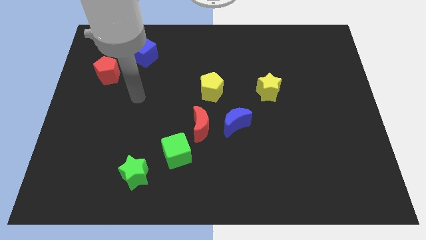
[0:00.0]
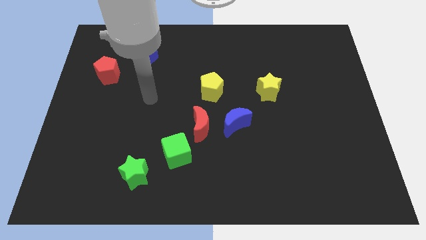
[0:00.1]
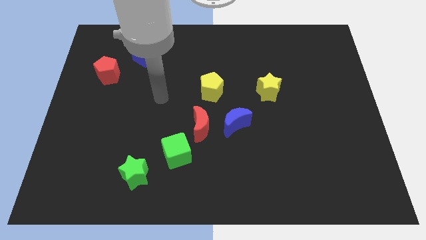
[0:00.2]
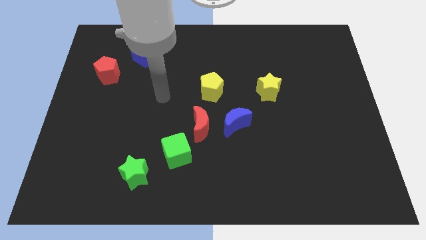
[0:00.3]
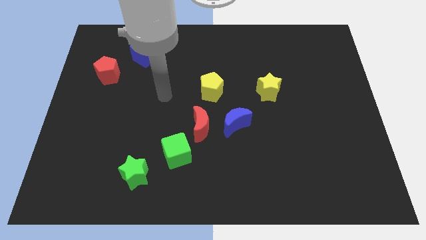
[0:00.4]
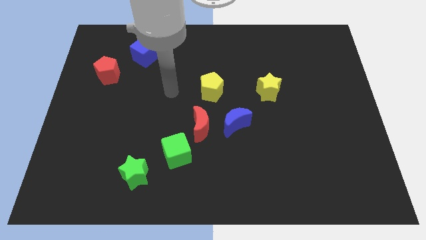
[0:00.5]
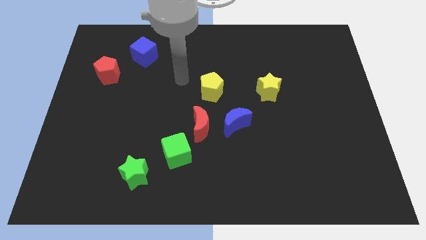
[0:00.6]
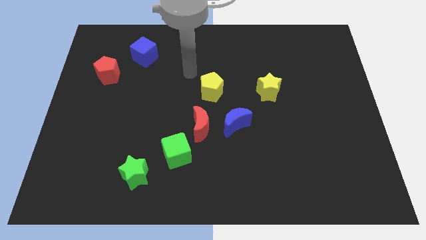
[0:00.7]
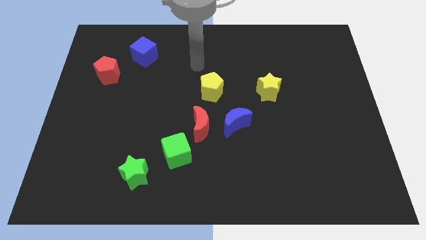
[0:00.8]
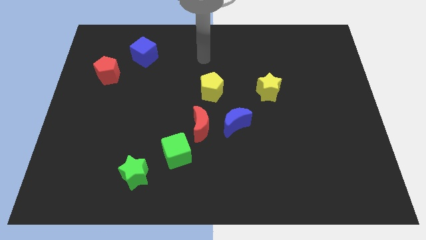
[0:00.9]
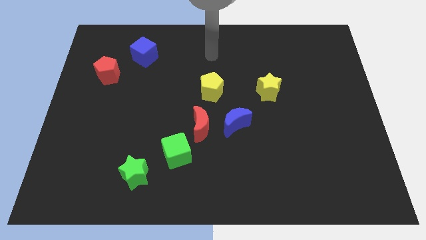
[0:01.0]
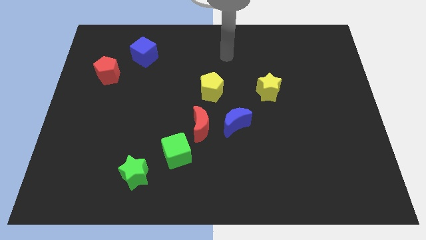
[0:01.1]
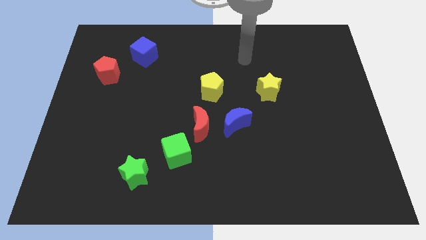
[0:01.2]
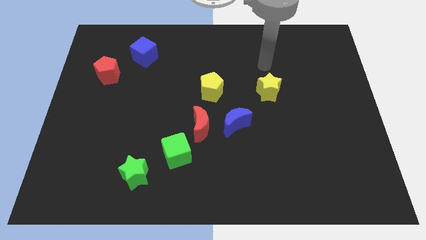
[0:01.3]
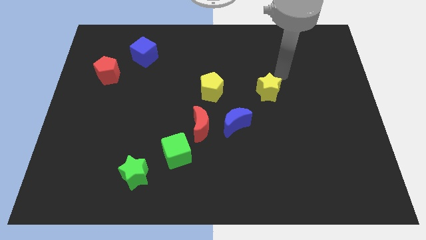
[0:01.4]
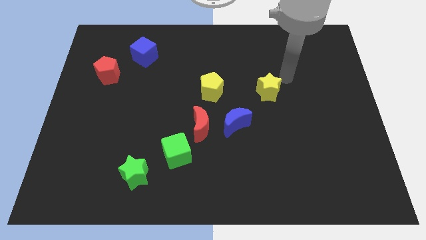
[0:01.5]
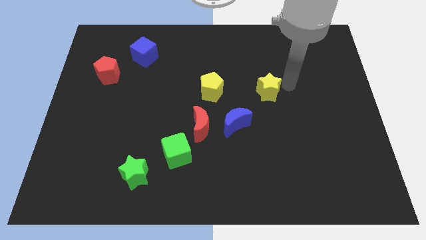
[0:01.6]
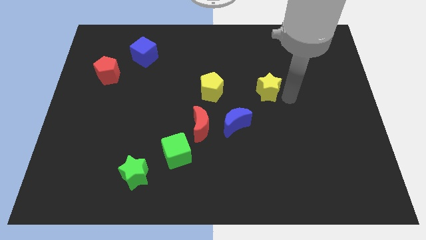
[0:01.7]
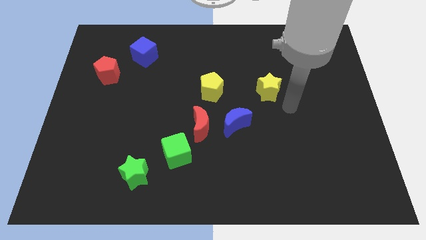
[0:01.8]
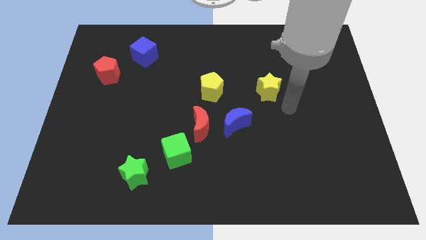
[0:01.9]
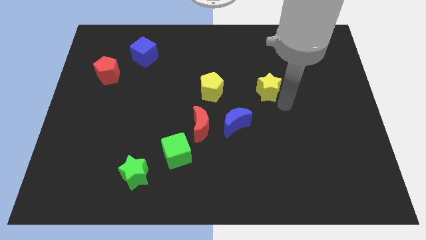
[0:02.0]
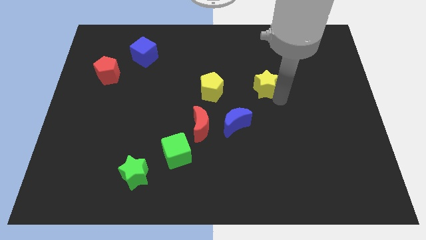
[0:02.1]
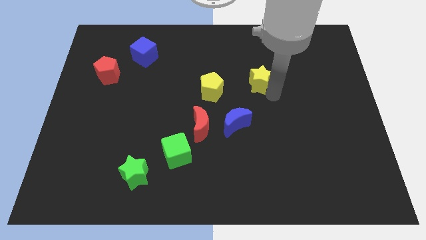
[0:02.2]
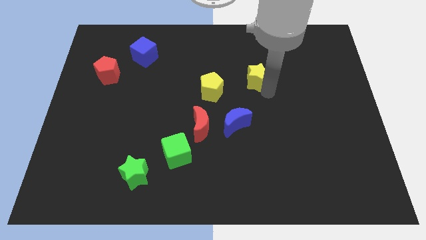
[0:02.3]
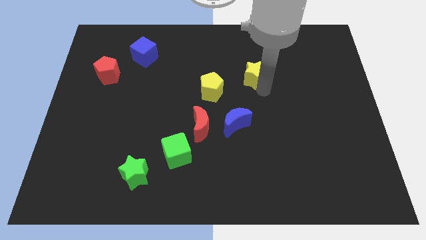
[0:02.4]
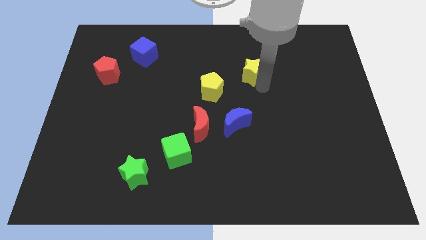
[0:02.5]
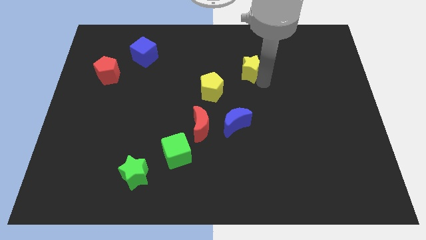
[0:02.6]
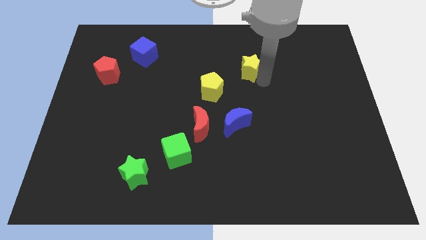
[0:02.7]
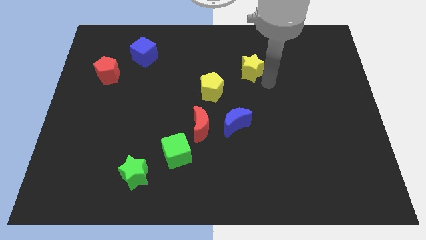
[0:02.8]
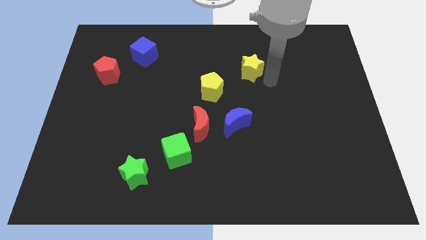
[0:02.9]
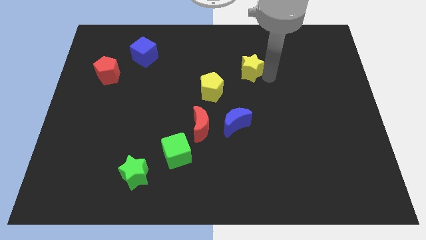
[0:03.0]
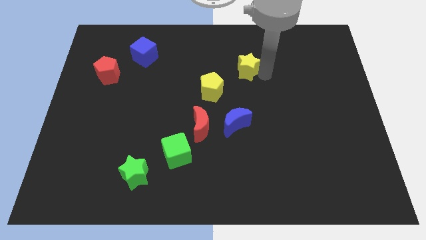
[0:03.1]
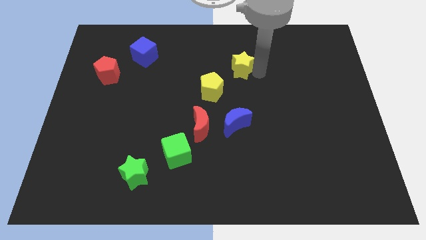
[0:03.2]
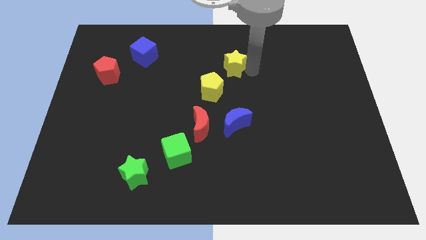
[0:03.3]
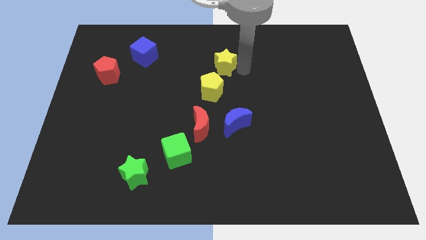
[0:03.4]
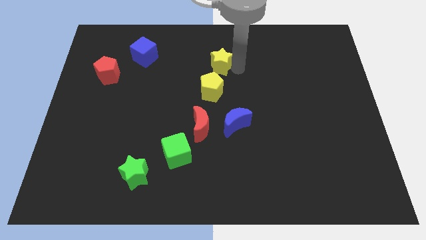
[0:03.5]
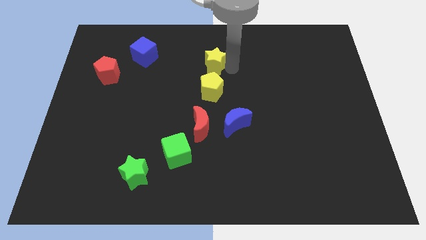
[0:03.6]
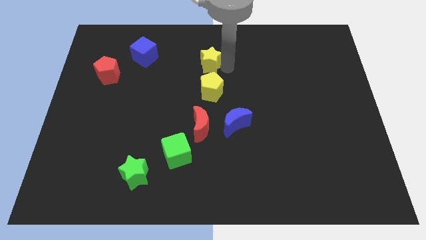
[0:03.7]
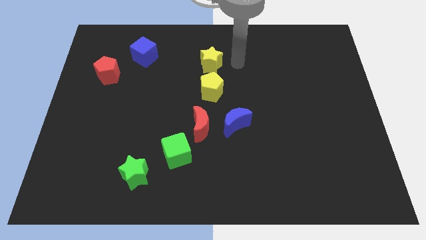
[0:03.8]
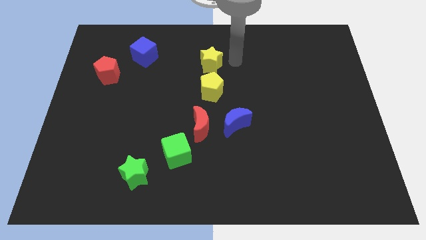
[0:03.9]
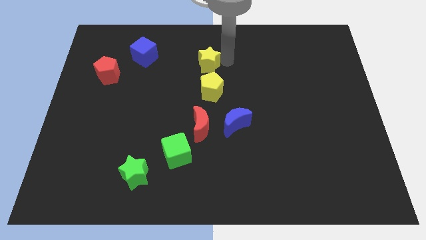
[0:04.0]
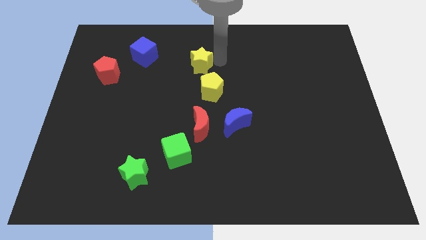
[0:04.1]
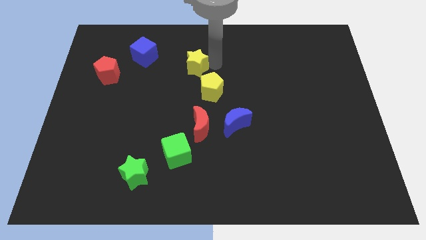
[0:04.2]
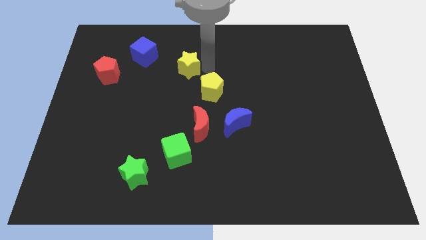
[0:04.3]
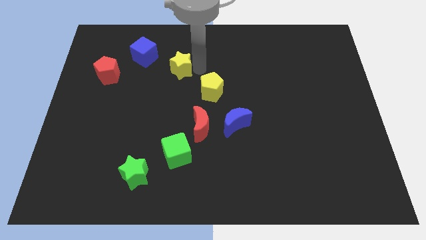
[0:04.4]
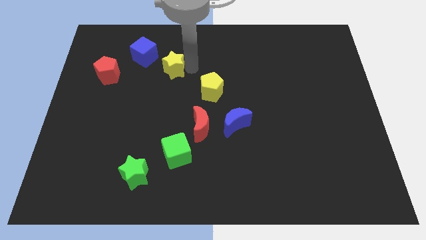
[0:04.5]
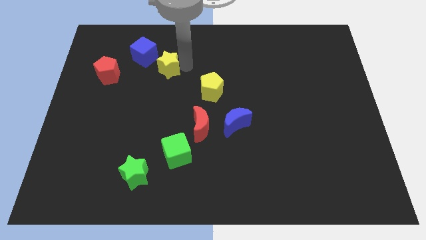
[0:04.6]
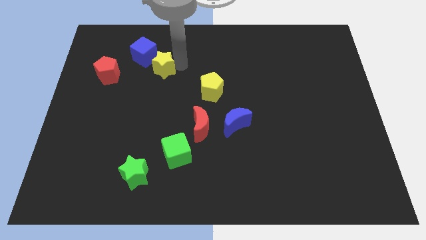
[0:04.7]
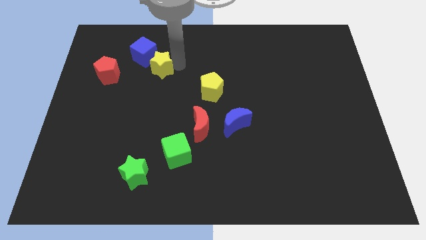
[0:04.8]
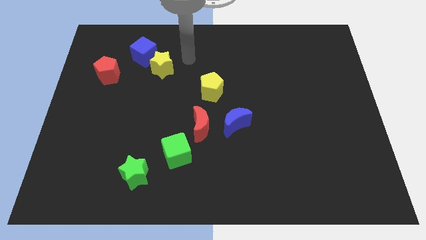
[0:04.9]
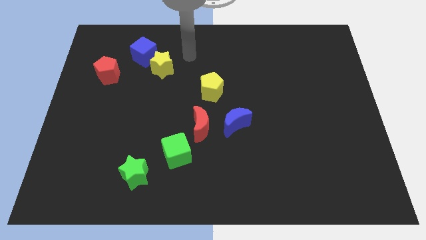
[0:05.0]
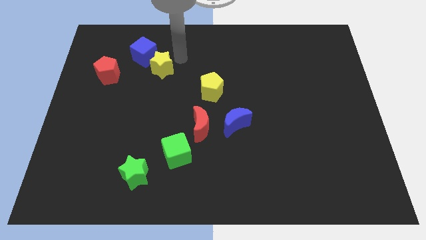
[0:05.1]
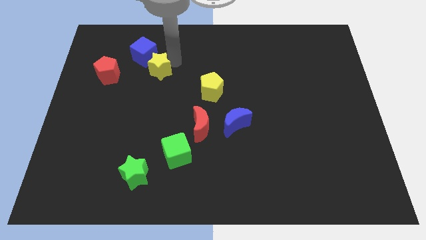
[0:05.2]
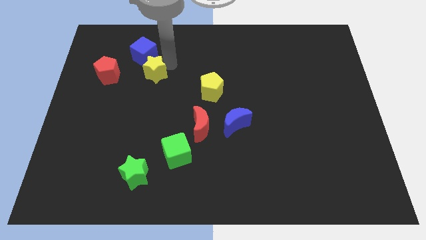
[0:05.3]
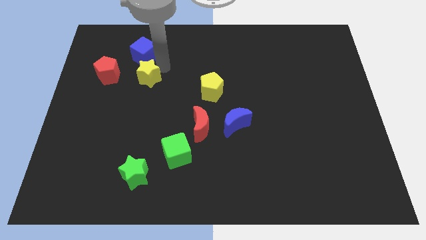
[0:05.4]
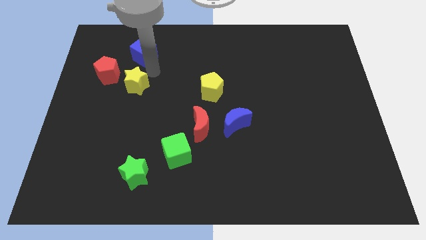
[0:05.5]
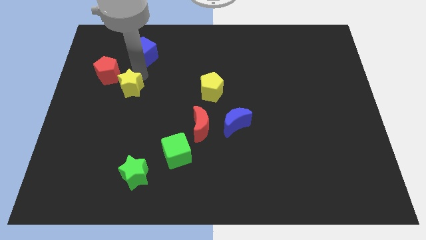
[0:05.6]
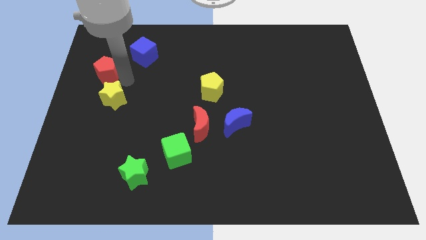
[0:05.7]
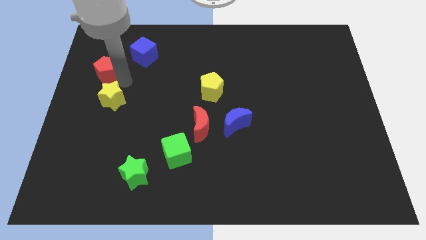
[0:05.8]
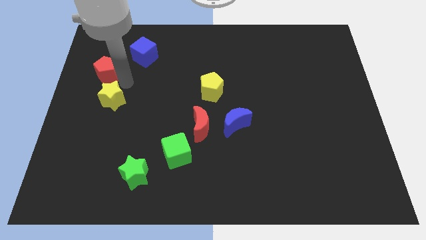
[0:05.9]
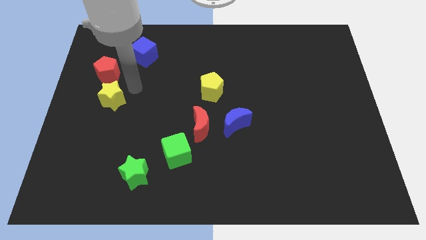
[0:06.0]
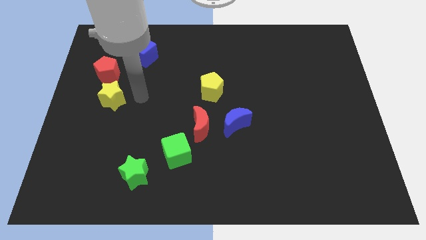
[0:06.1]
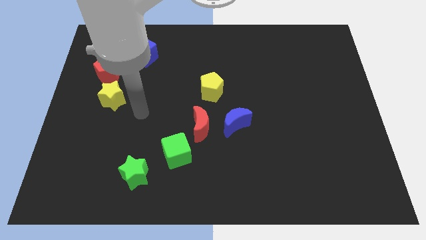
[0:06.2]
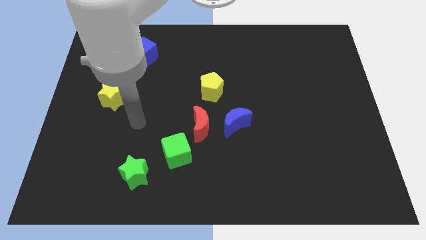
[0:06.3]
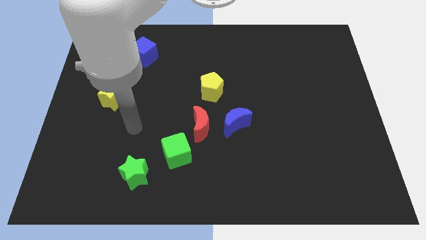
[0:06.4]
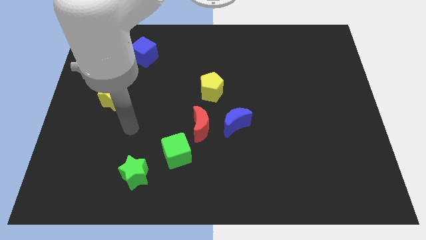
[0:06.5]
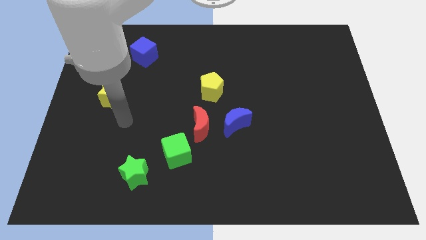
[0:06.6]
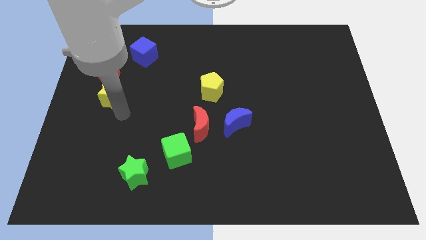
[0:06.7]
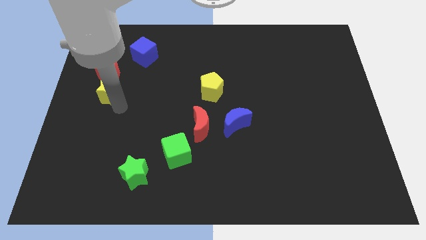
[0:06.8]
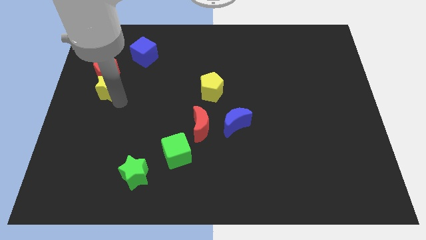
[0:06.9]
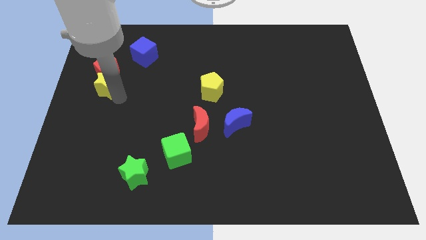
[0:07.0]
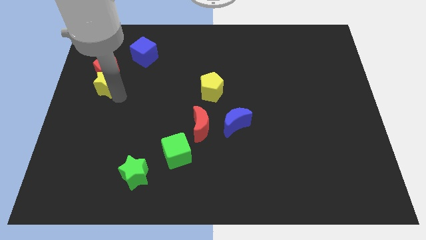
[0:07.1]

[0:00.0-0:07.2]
push the yellow star towards the red pentagon

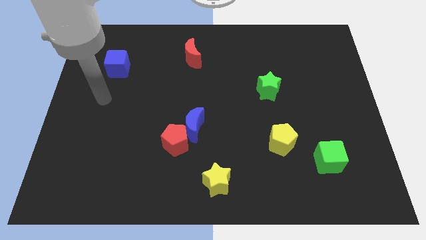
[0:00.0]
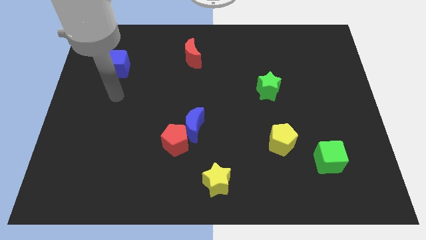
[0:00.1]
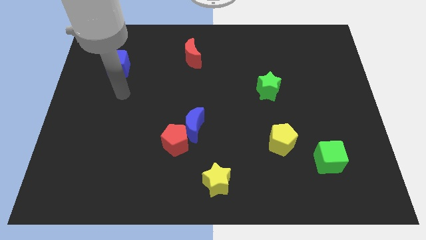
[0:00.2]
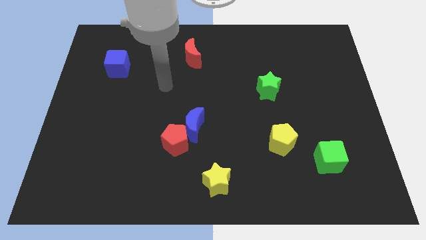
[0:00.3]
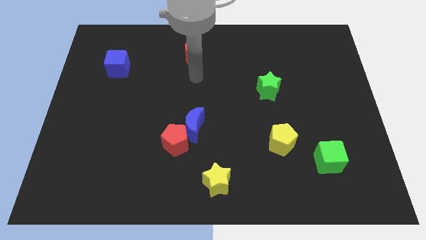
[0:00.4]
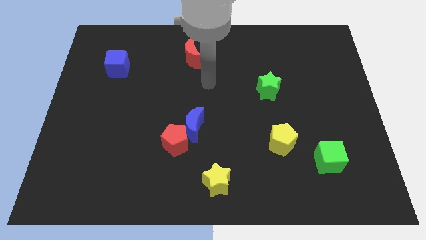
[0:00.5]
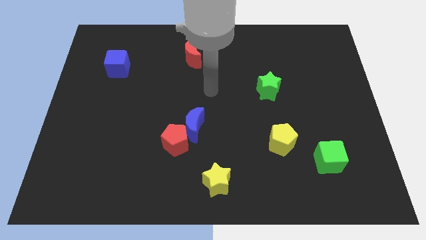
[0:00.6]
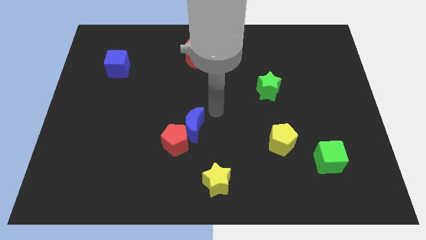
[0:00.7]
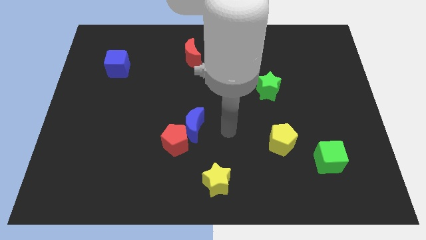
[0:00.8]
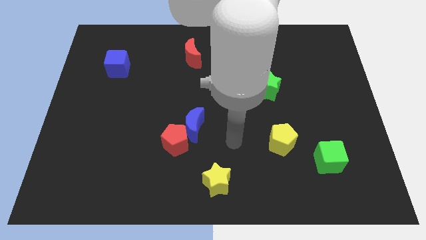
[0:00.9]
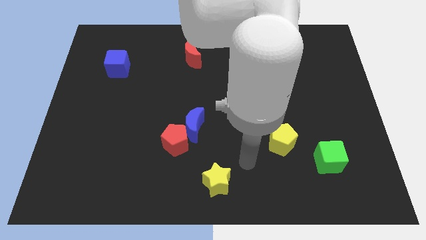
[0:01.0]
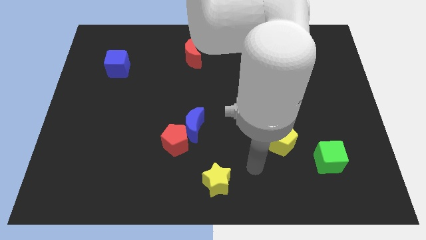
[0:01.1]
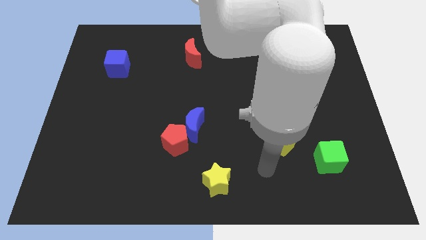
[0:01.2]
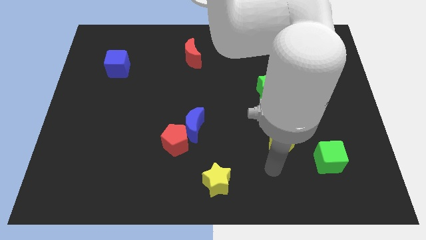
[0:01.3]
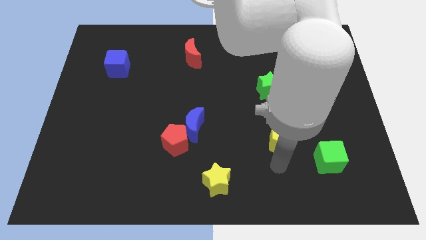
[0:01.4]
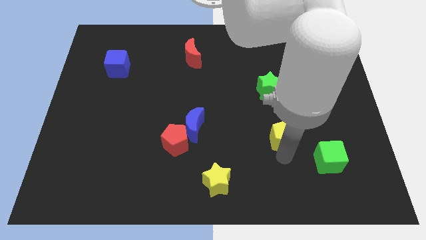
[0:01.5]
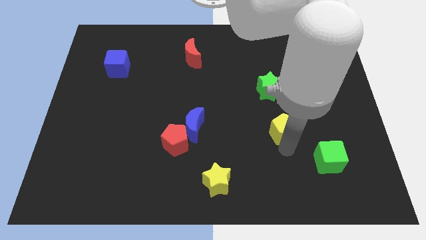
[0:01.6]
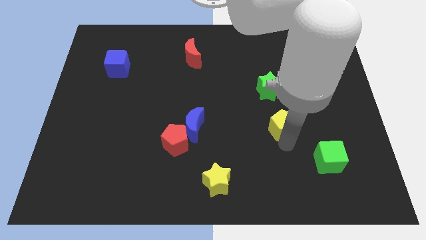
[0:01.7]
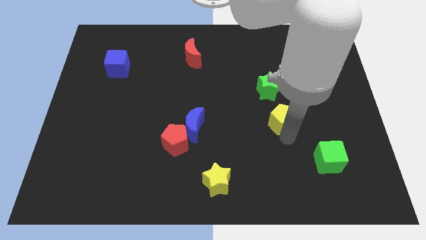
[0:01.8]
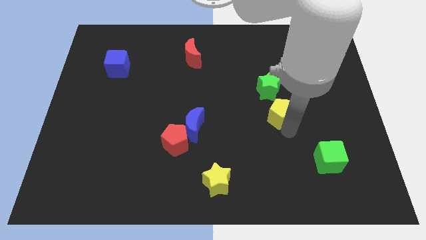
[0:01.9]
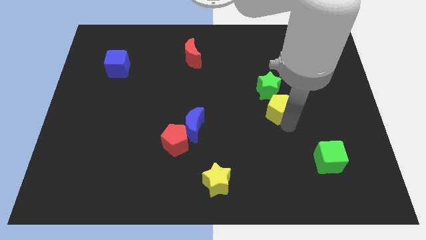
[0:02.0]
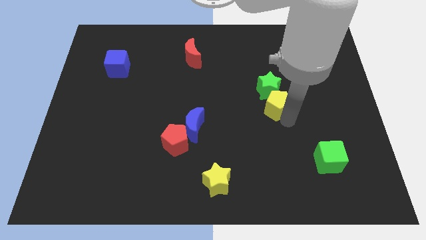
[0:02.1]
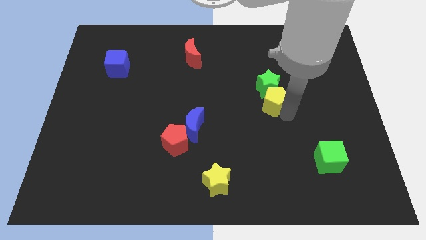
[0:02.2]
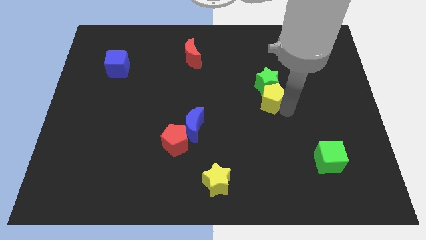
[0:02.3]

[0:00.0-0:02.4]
push the yellow pentagon towards the green star
